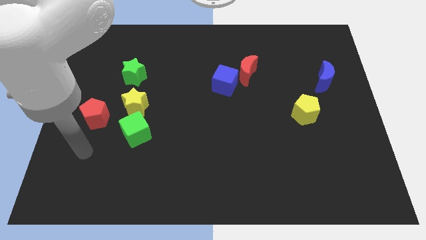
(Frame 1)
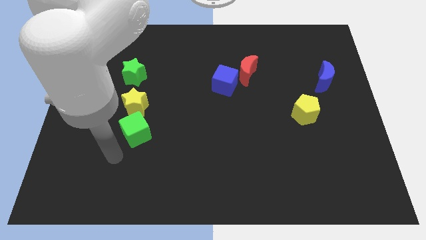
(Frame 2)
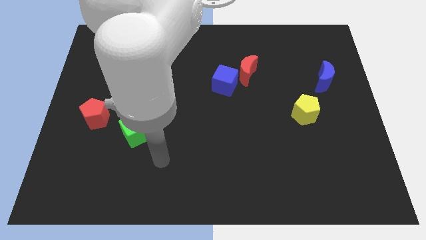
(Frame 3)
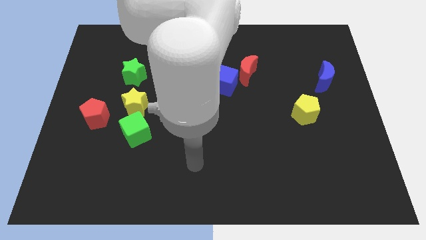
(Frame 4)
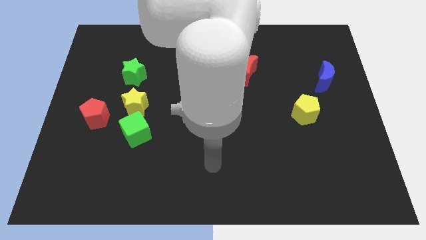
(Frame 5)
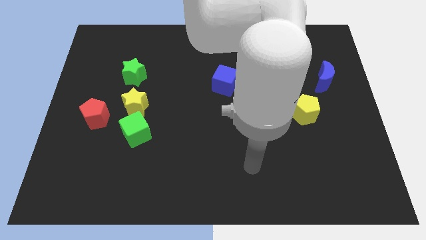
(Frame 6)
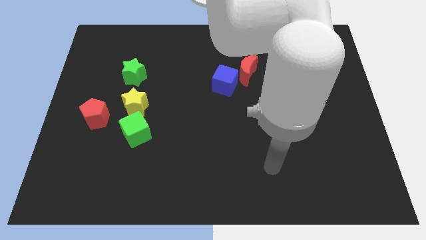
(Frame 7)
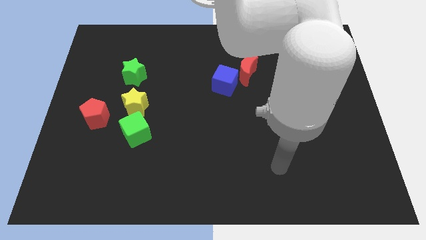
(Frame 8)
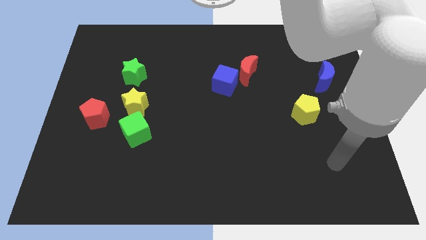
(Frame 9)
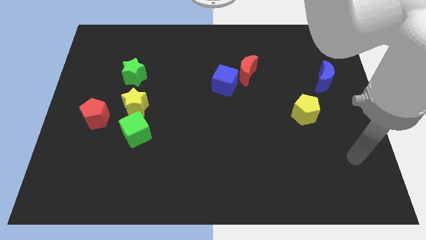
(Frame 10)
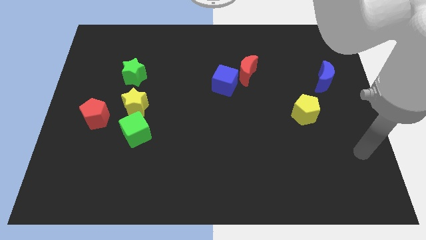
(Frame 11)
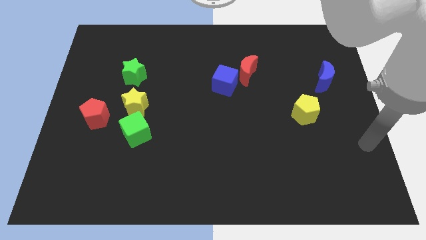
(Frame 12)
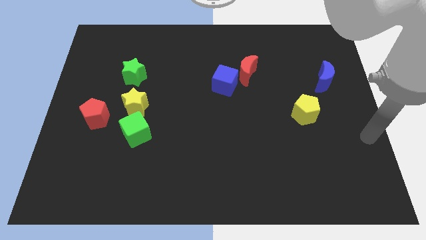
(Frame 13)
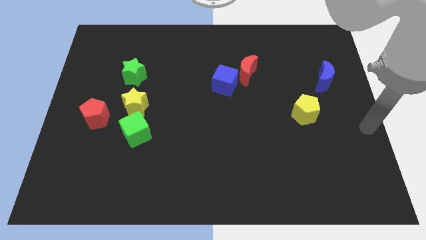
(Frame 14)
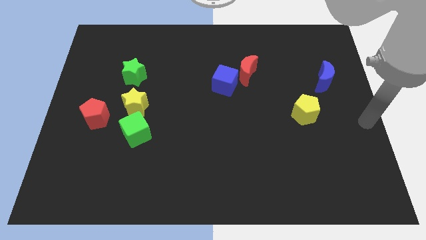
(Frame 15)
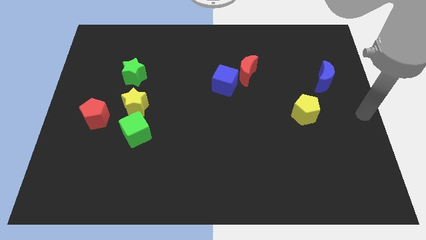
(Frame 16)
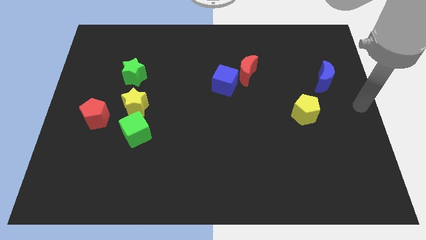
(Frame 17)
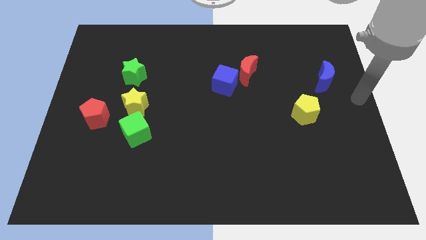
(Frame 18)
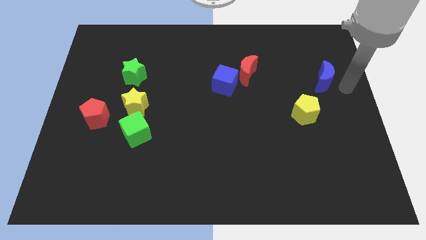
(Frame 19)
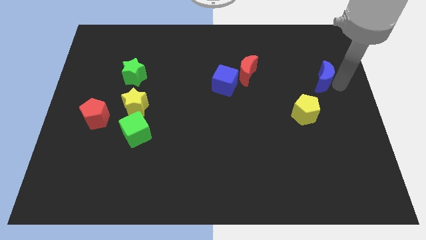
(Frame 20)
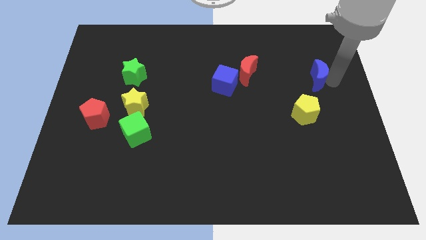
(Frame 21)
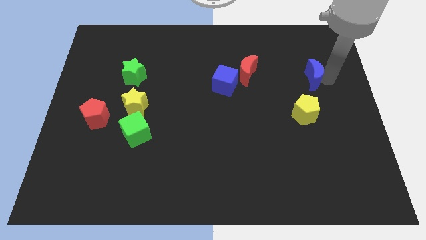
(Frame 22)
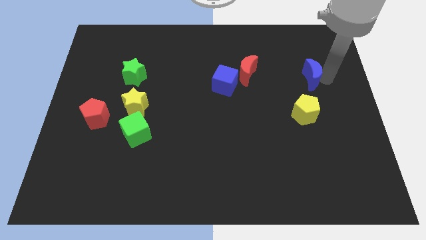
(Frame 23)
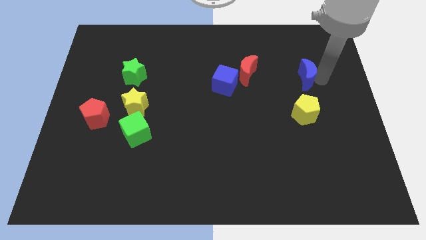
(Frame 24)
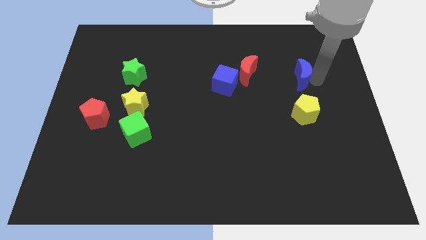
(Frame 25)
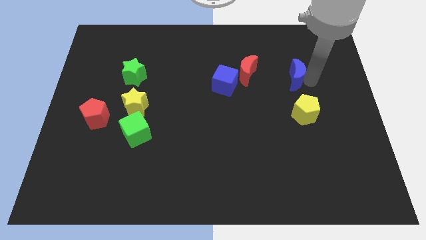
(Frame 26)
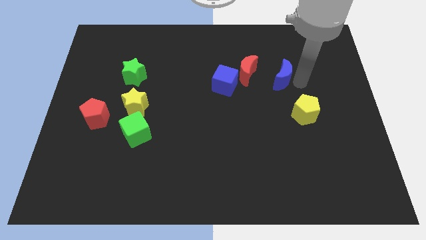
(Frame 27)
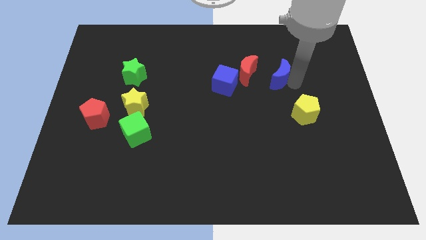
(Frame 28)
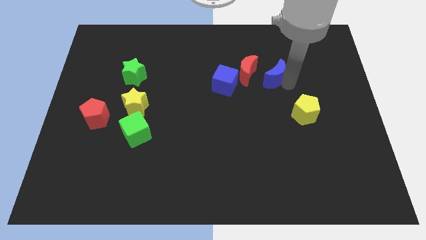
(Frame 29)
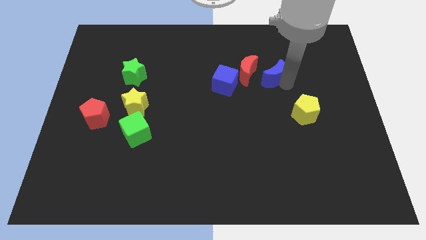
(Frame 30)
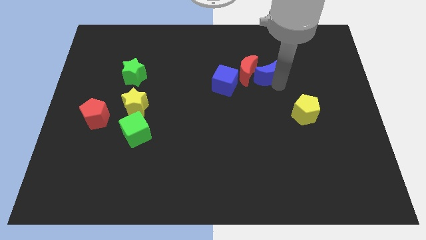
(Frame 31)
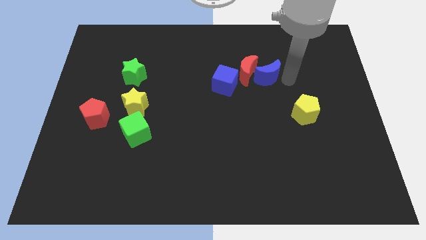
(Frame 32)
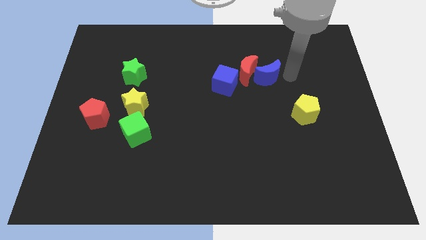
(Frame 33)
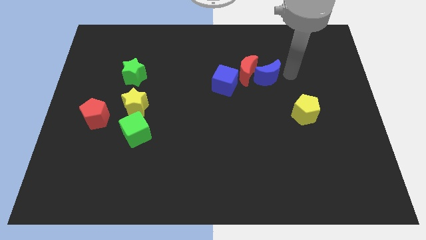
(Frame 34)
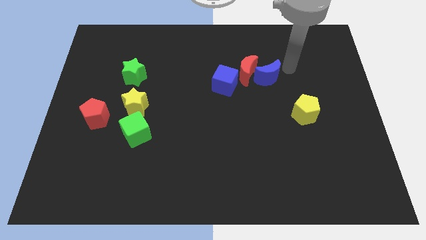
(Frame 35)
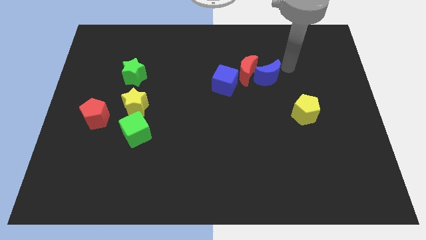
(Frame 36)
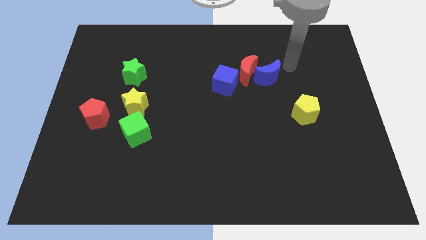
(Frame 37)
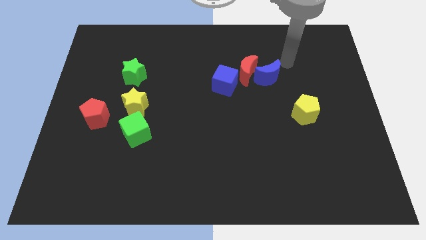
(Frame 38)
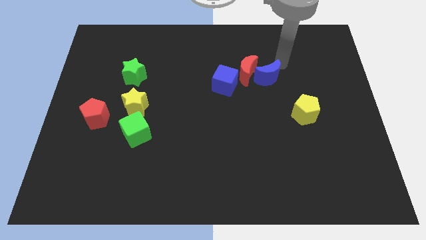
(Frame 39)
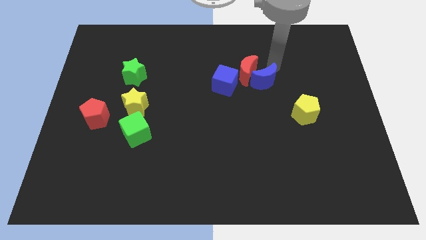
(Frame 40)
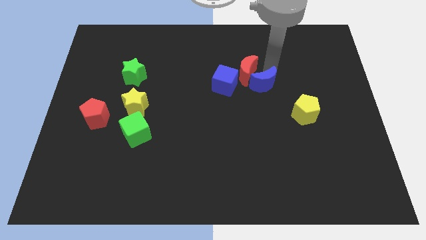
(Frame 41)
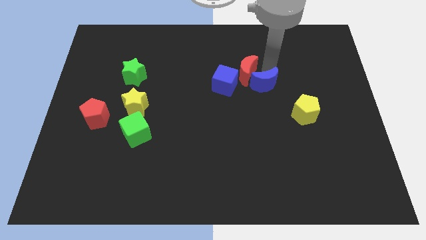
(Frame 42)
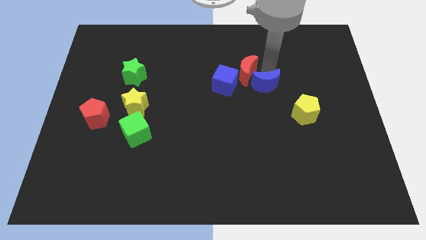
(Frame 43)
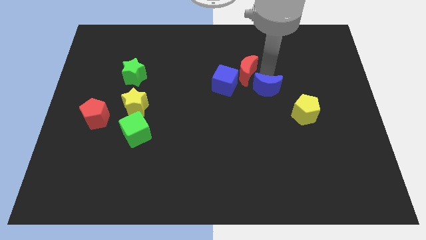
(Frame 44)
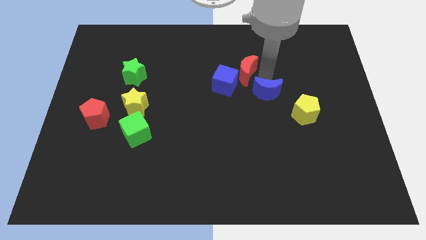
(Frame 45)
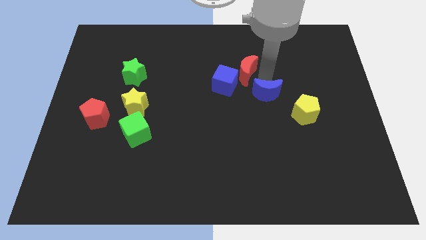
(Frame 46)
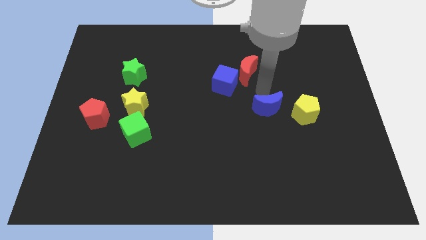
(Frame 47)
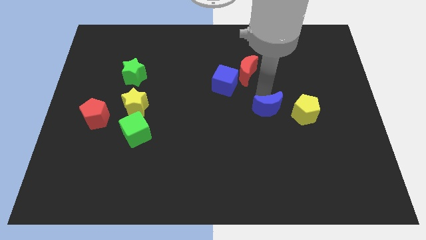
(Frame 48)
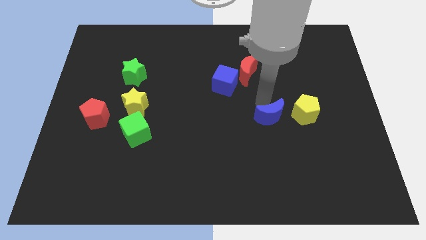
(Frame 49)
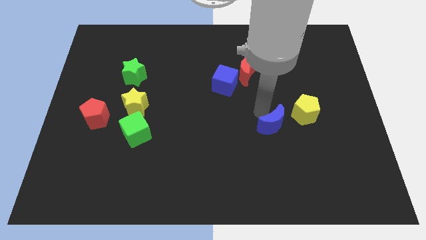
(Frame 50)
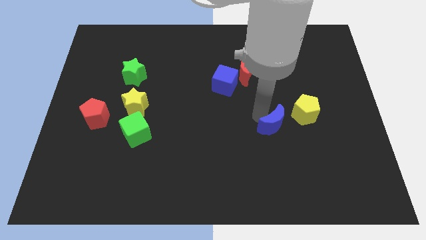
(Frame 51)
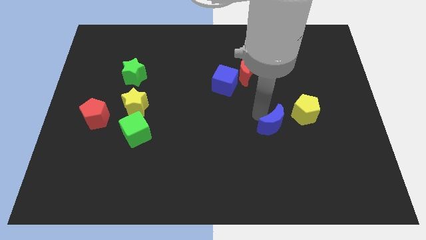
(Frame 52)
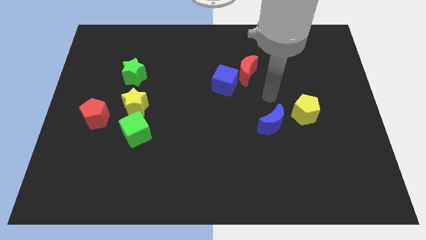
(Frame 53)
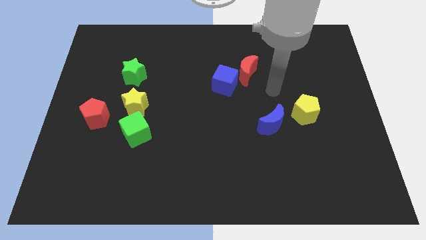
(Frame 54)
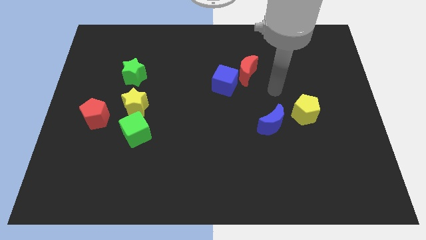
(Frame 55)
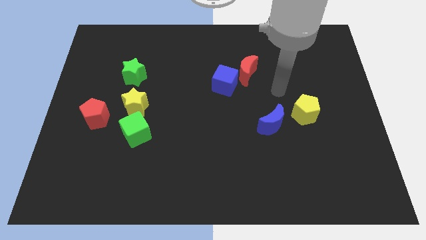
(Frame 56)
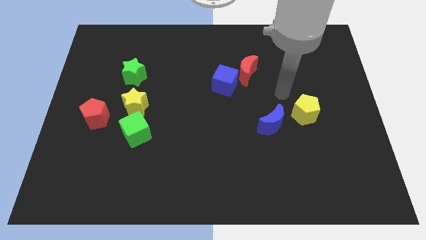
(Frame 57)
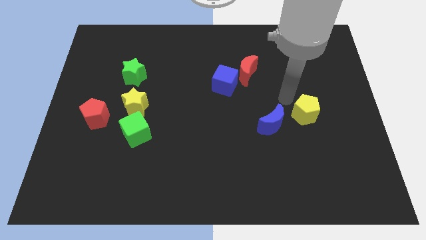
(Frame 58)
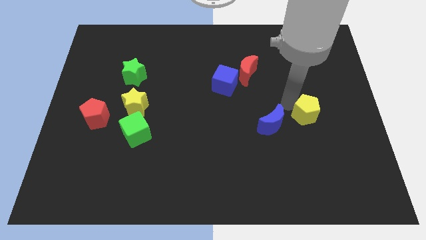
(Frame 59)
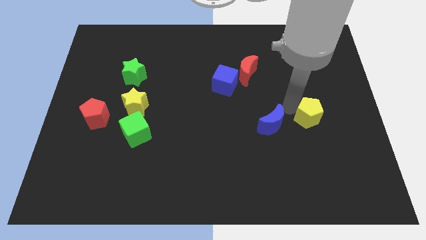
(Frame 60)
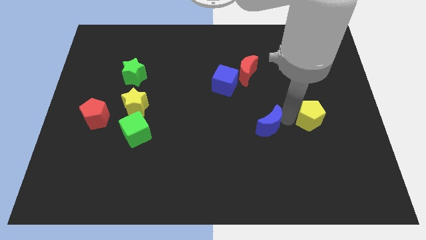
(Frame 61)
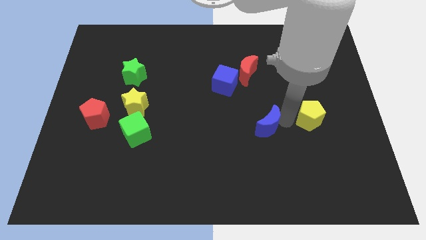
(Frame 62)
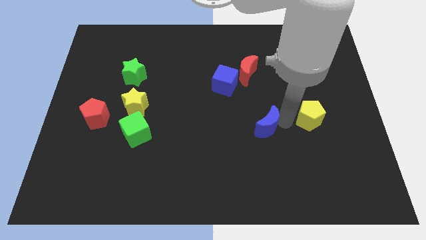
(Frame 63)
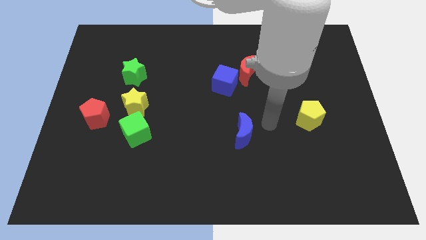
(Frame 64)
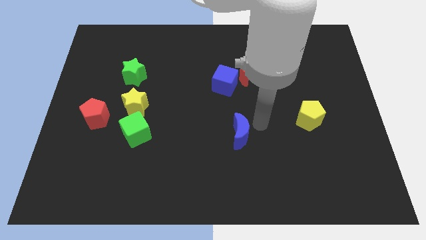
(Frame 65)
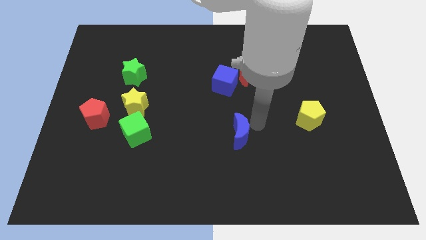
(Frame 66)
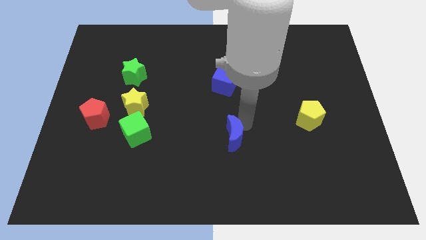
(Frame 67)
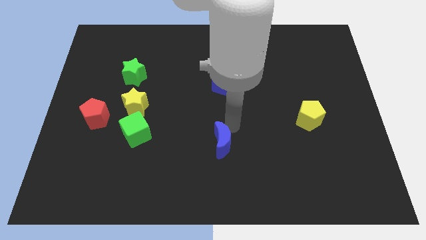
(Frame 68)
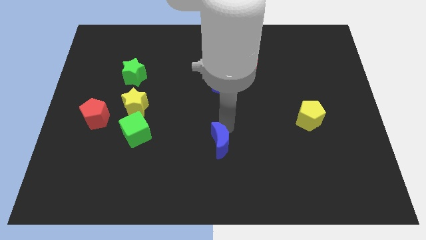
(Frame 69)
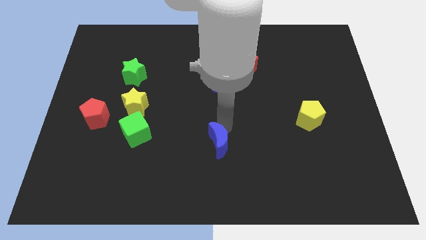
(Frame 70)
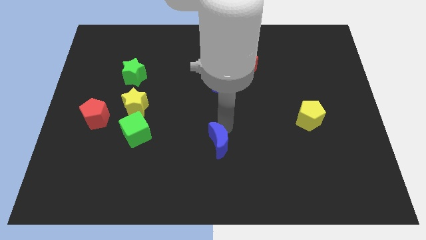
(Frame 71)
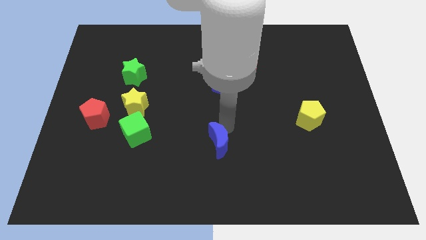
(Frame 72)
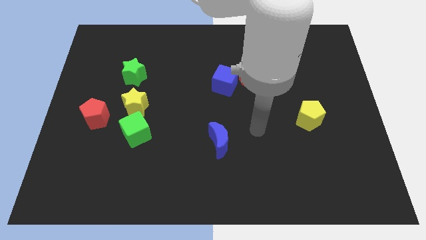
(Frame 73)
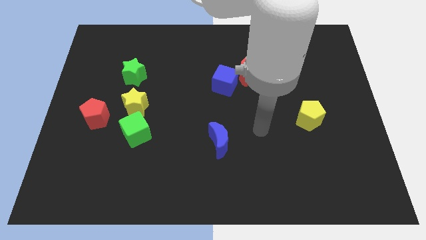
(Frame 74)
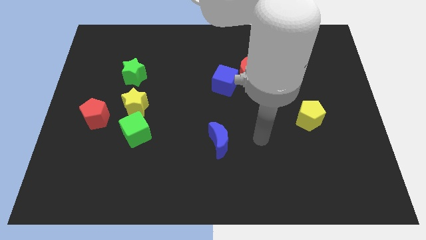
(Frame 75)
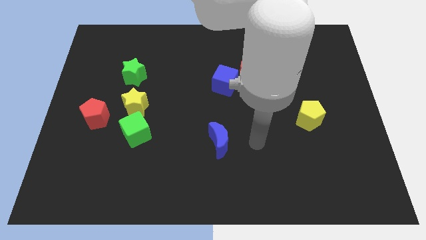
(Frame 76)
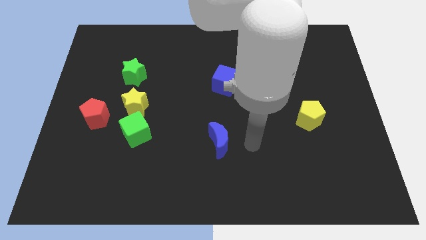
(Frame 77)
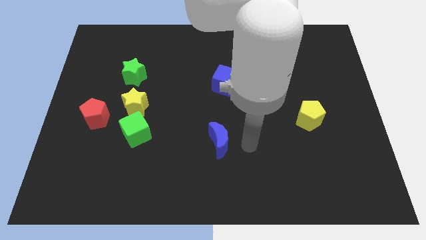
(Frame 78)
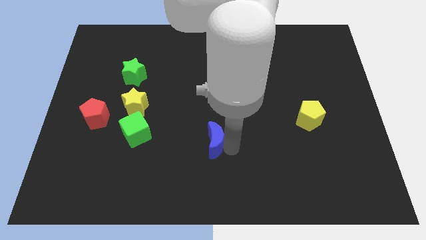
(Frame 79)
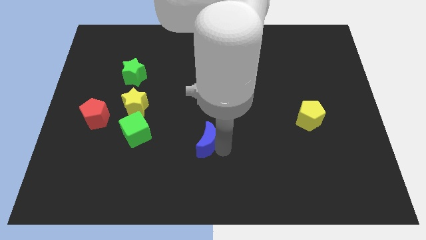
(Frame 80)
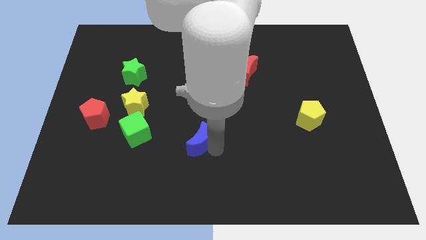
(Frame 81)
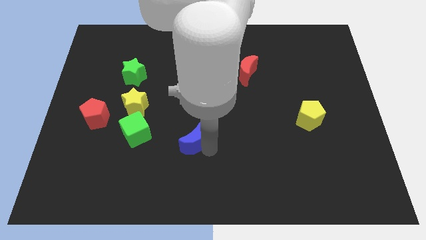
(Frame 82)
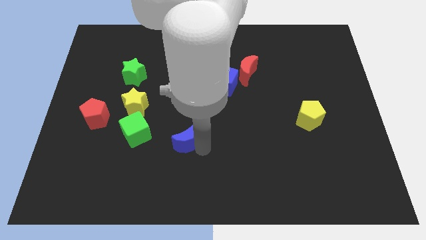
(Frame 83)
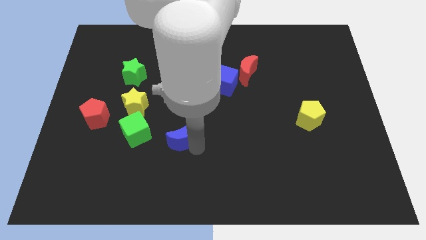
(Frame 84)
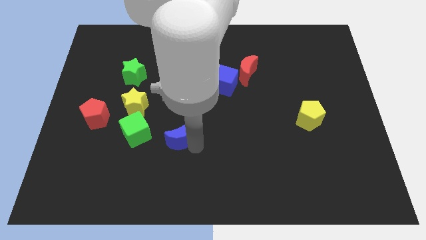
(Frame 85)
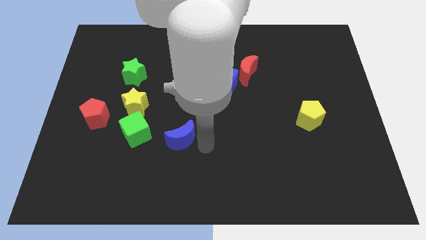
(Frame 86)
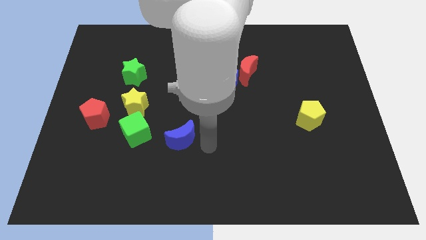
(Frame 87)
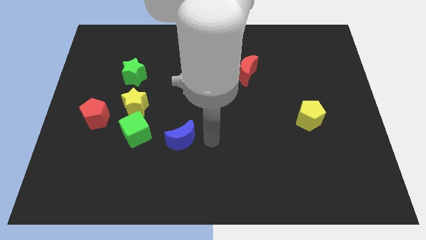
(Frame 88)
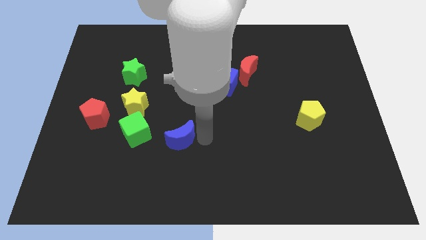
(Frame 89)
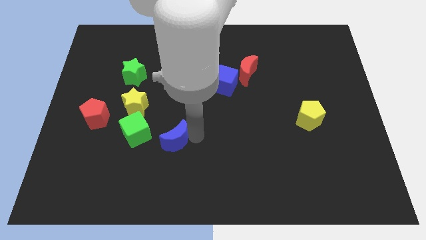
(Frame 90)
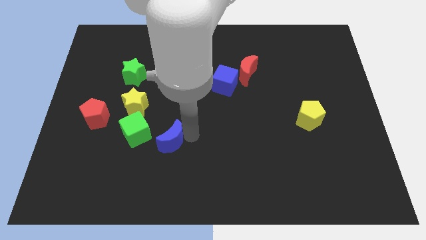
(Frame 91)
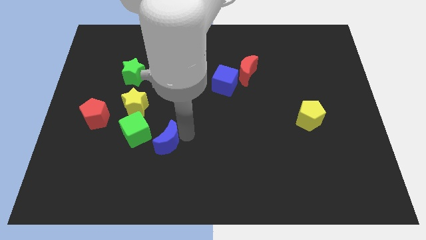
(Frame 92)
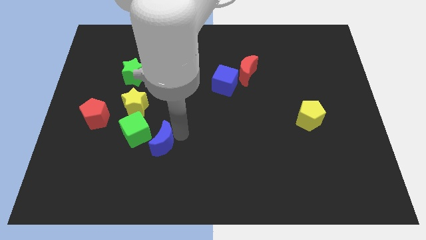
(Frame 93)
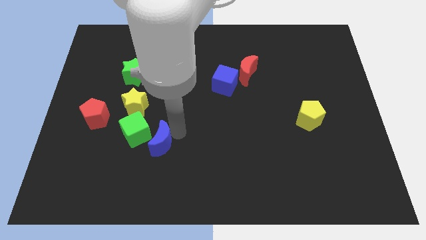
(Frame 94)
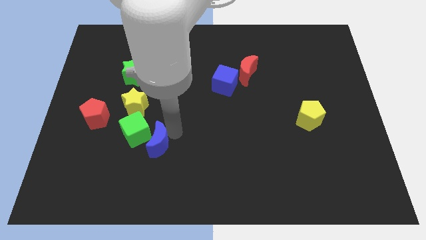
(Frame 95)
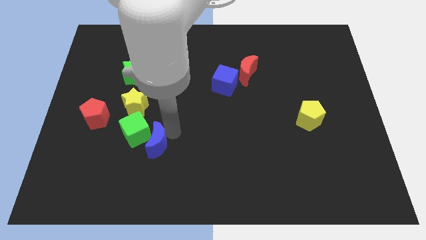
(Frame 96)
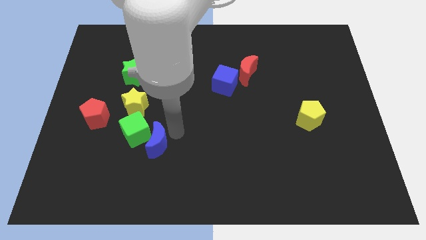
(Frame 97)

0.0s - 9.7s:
slide the blue moon close to the green cube
